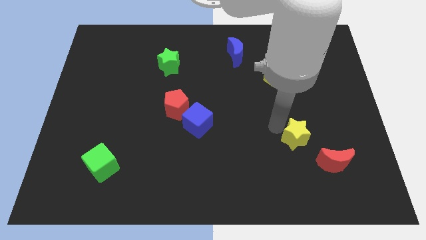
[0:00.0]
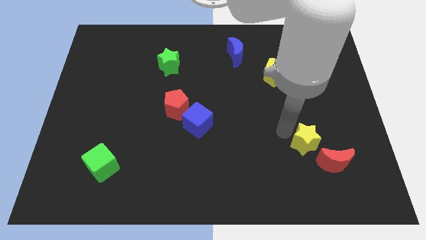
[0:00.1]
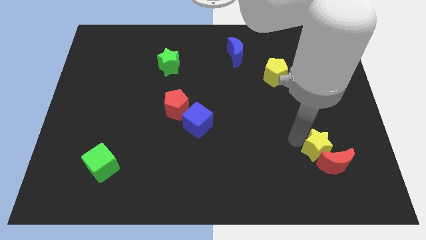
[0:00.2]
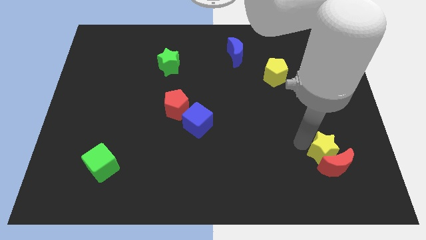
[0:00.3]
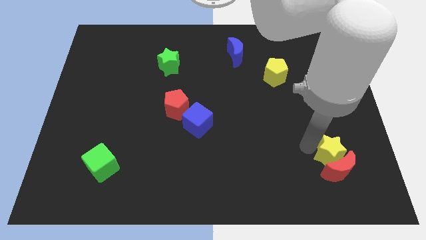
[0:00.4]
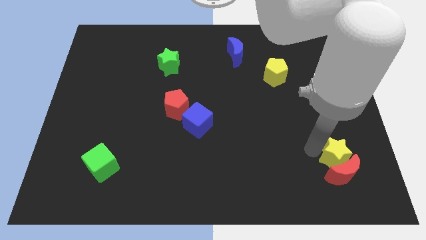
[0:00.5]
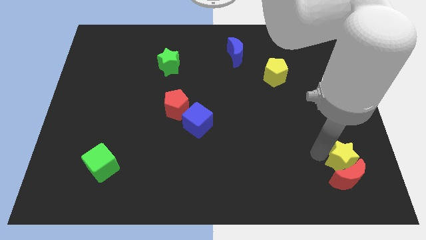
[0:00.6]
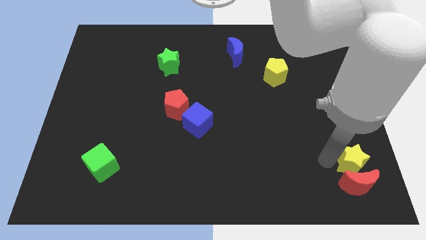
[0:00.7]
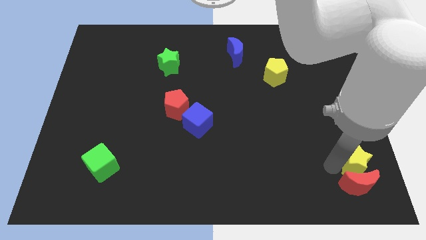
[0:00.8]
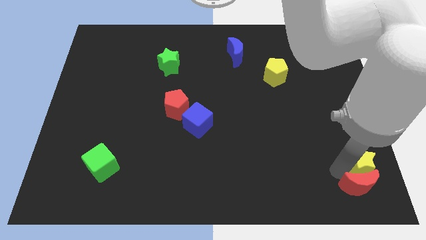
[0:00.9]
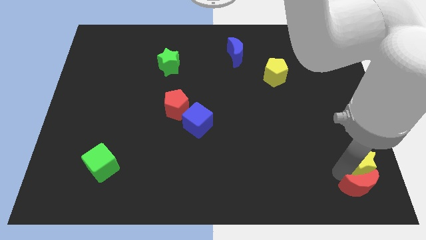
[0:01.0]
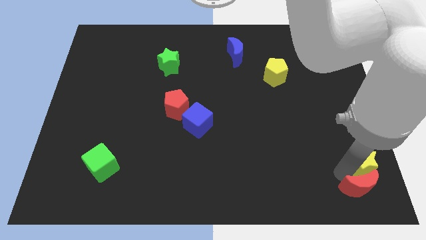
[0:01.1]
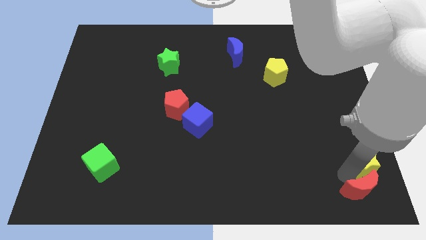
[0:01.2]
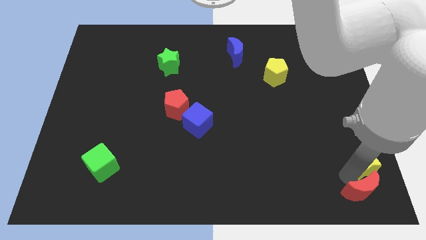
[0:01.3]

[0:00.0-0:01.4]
push yellow star into the red moon

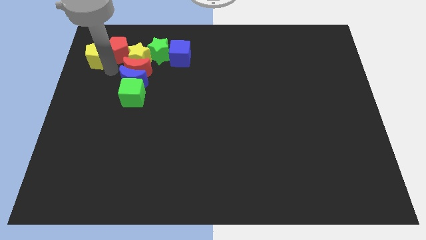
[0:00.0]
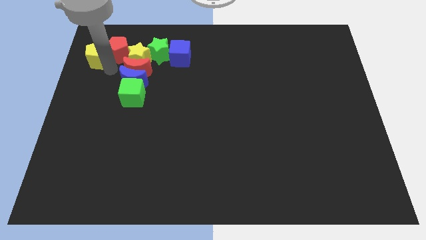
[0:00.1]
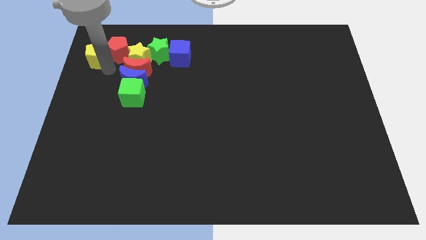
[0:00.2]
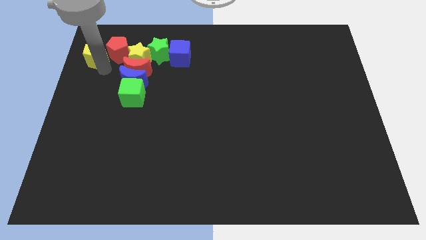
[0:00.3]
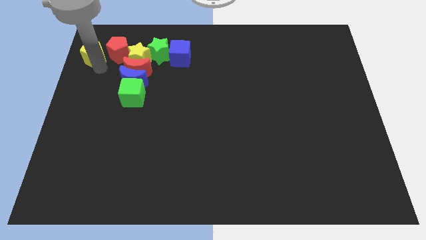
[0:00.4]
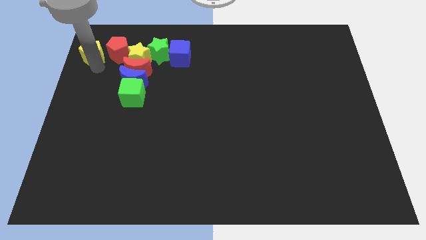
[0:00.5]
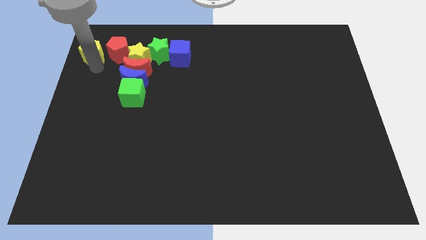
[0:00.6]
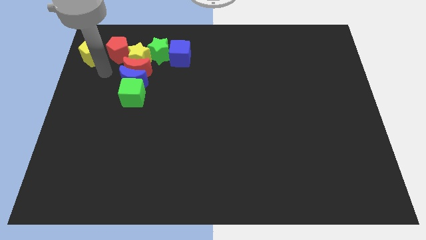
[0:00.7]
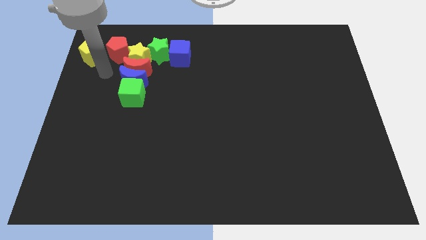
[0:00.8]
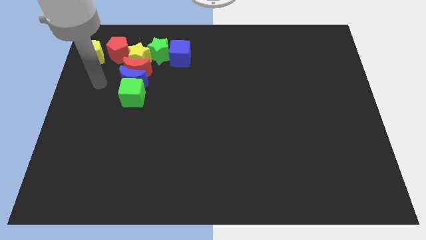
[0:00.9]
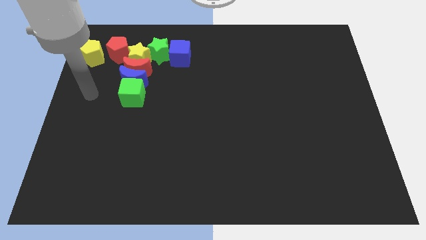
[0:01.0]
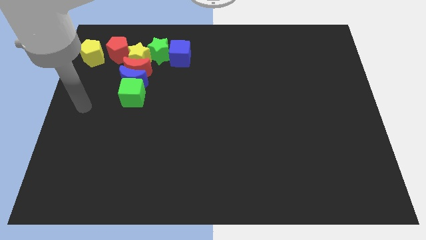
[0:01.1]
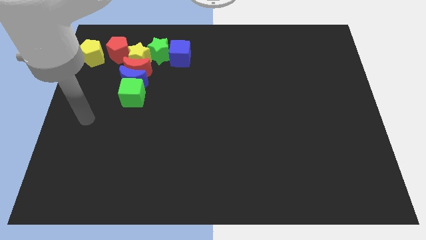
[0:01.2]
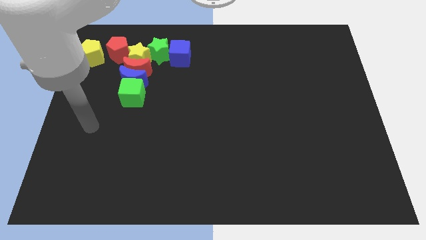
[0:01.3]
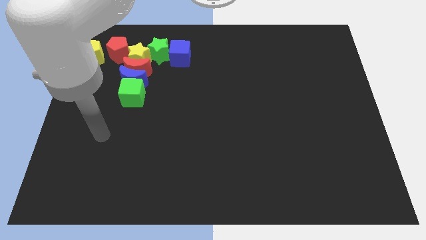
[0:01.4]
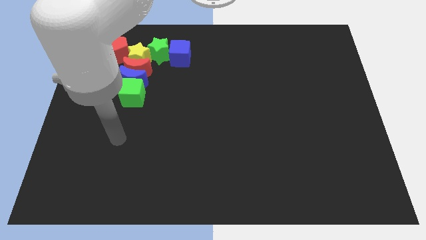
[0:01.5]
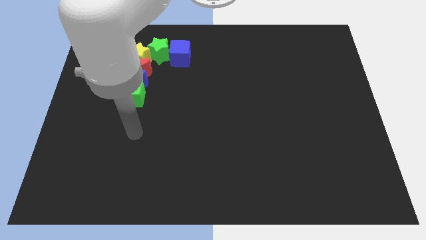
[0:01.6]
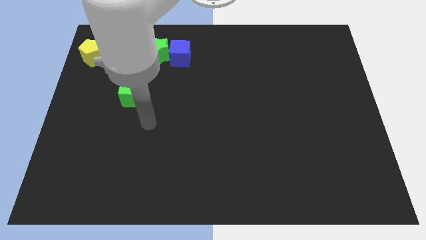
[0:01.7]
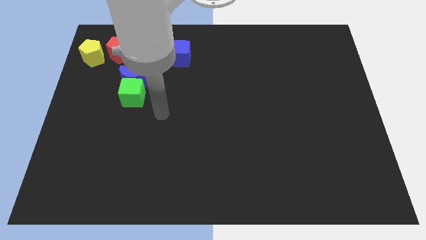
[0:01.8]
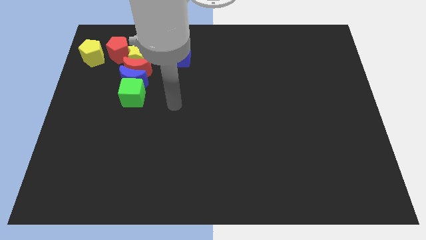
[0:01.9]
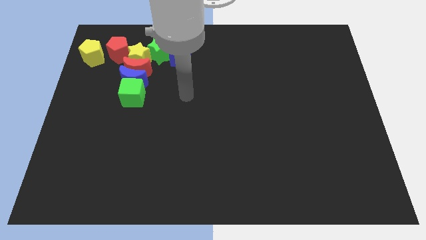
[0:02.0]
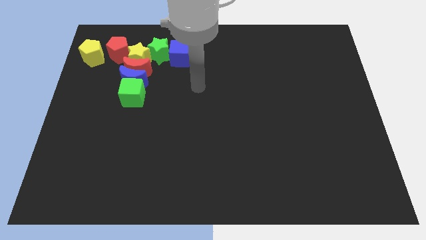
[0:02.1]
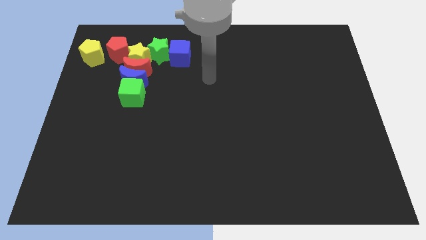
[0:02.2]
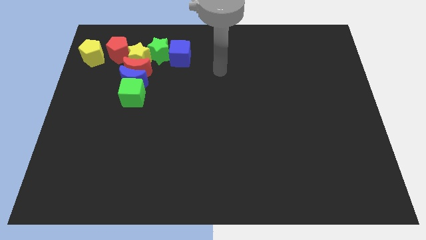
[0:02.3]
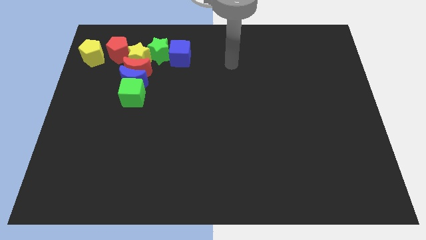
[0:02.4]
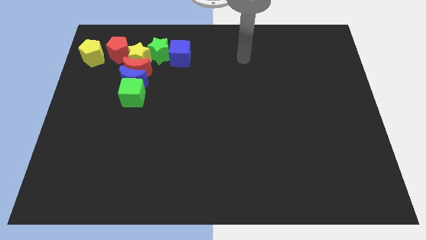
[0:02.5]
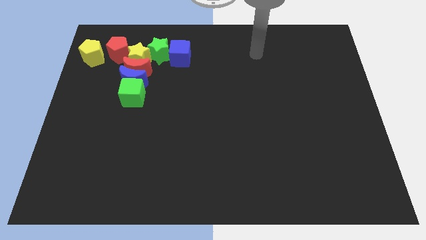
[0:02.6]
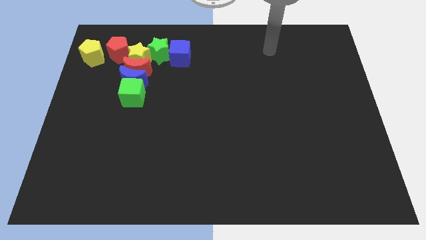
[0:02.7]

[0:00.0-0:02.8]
move yourself away from the yellow pentagon

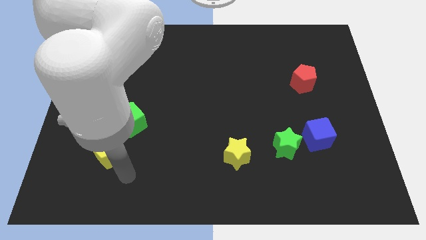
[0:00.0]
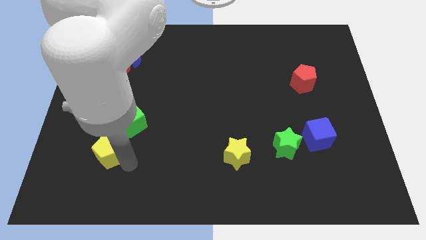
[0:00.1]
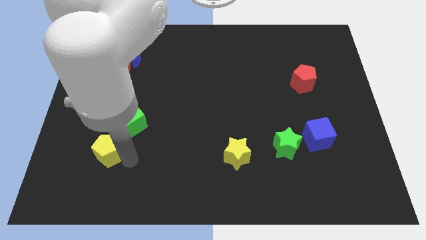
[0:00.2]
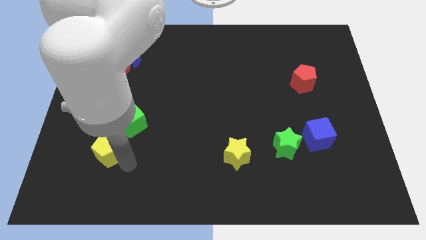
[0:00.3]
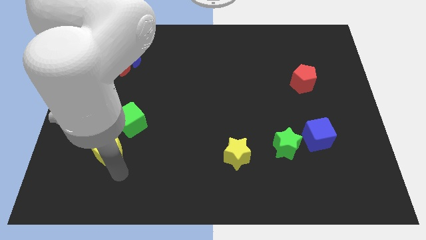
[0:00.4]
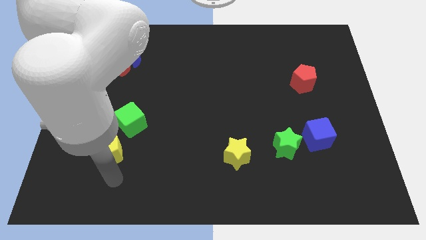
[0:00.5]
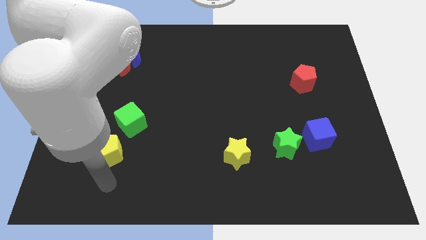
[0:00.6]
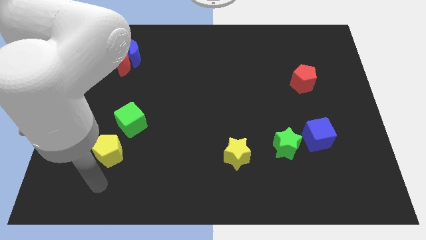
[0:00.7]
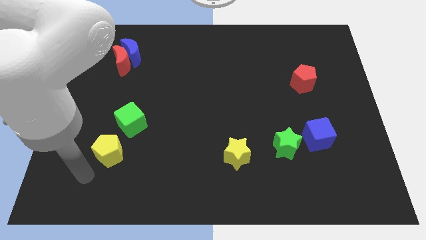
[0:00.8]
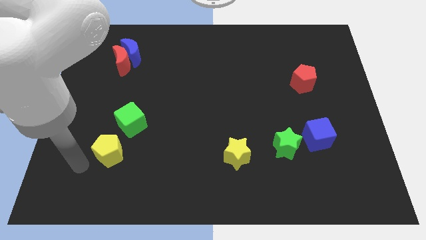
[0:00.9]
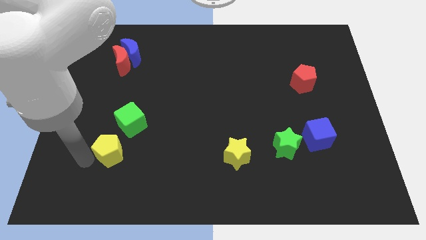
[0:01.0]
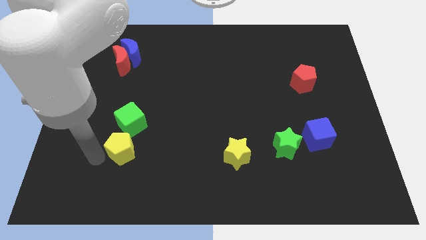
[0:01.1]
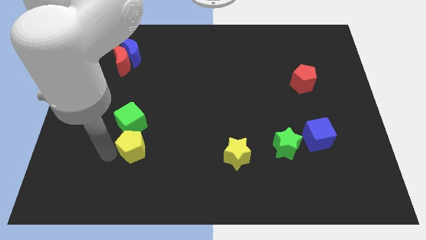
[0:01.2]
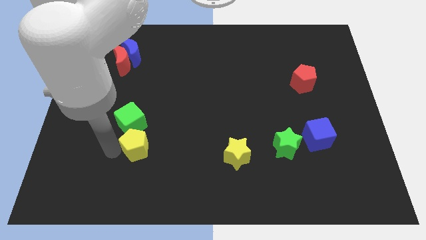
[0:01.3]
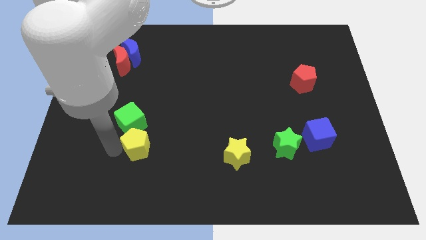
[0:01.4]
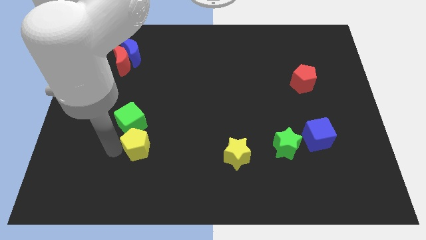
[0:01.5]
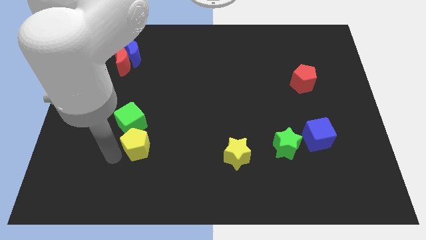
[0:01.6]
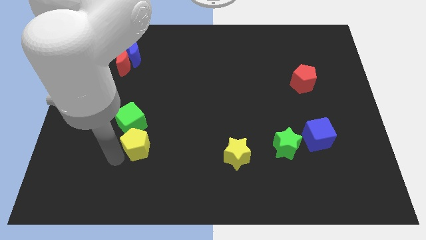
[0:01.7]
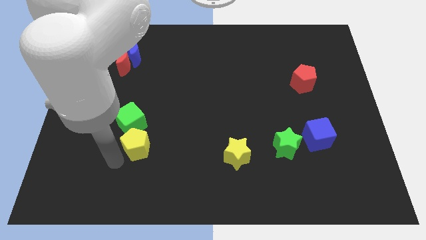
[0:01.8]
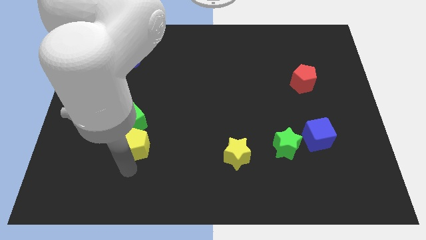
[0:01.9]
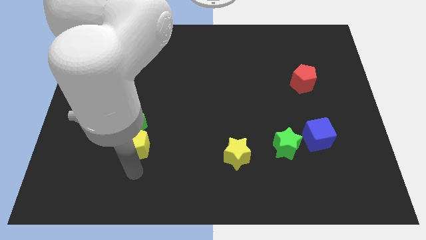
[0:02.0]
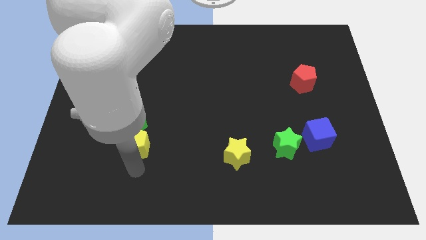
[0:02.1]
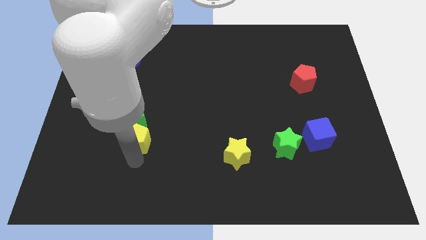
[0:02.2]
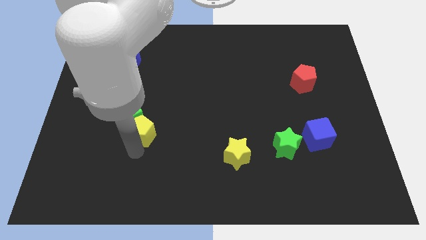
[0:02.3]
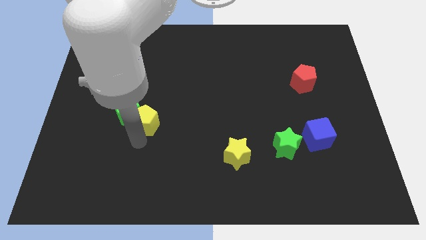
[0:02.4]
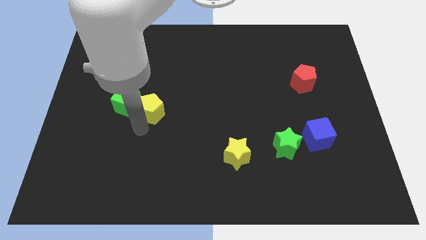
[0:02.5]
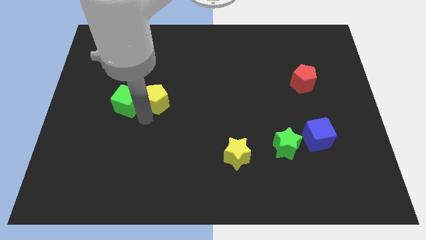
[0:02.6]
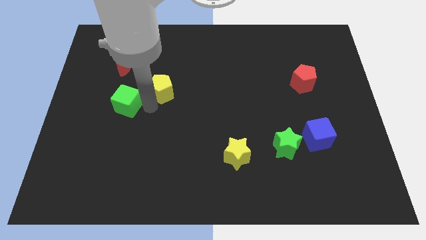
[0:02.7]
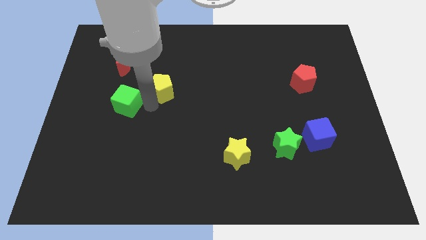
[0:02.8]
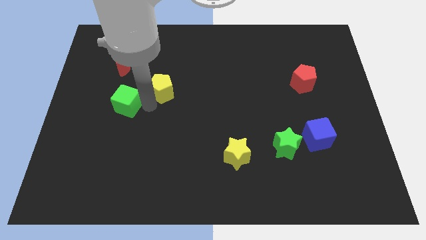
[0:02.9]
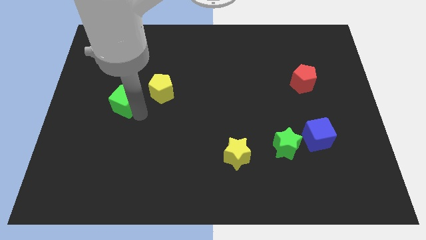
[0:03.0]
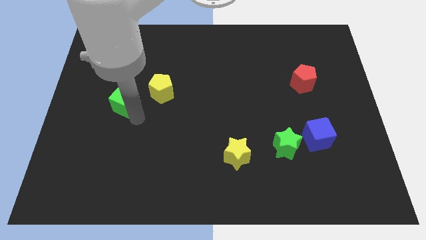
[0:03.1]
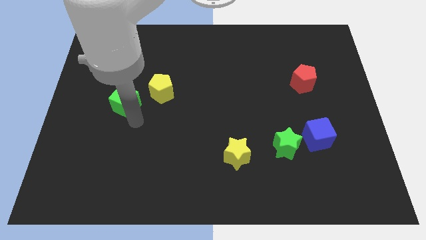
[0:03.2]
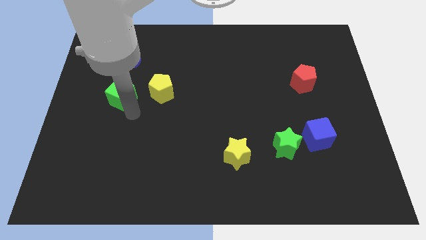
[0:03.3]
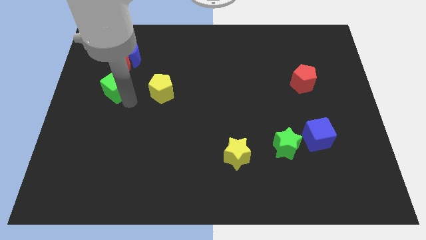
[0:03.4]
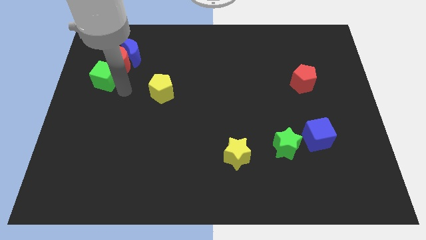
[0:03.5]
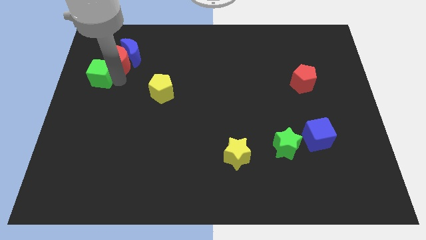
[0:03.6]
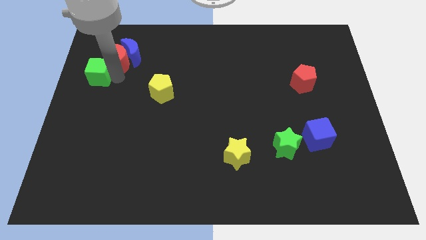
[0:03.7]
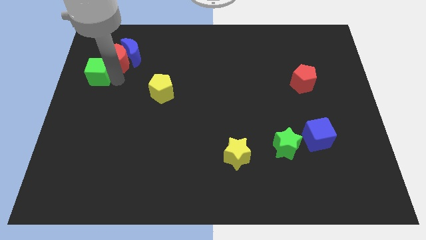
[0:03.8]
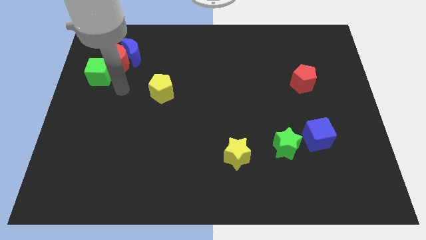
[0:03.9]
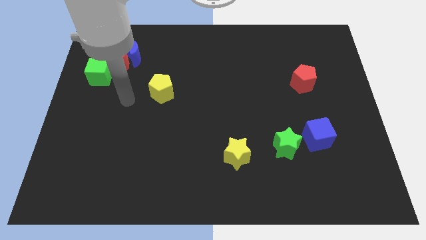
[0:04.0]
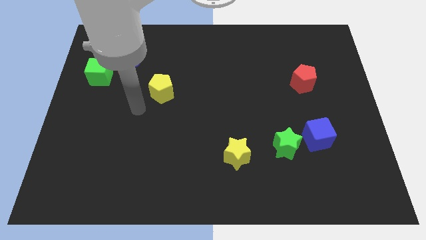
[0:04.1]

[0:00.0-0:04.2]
move the green cube and the yellow pentagon towards top

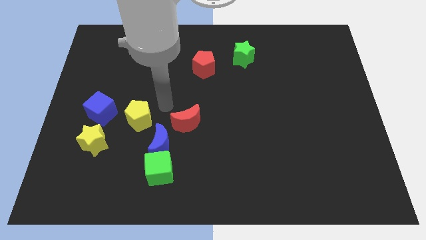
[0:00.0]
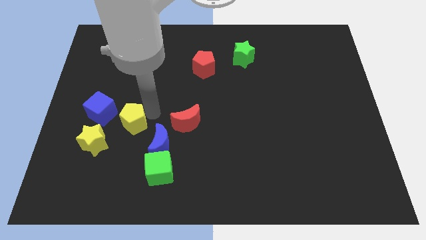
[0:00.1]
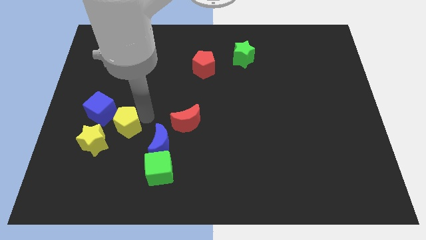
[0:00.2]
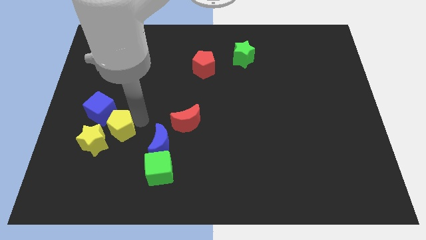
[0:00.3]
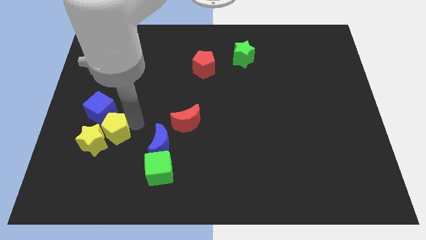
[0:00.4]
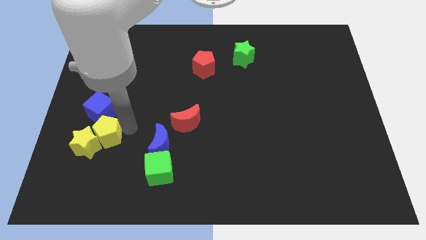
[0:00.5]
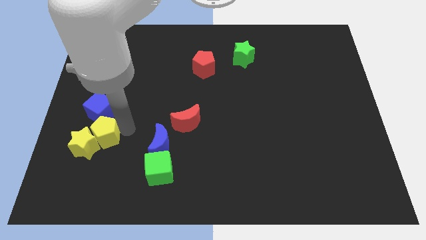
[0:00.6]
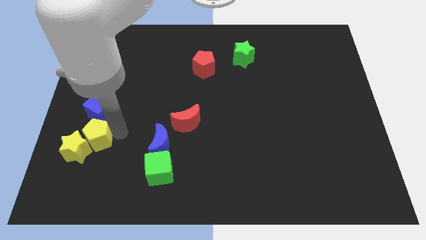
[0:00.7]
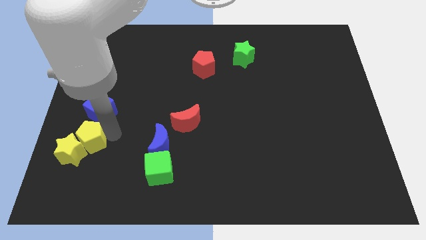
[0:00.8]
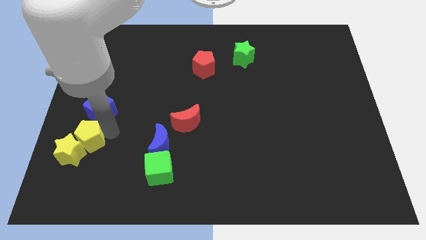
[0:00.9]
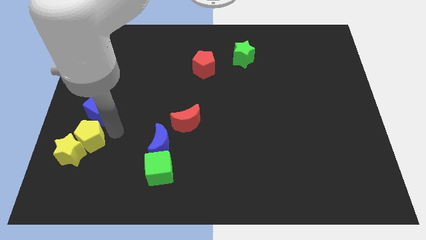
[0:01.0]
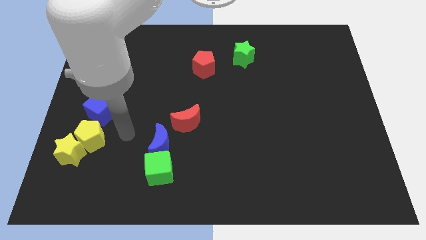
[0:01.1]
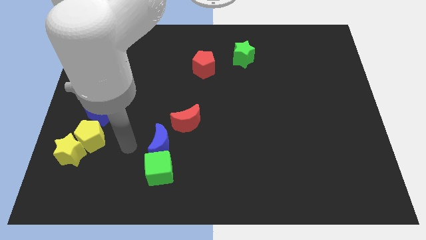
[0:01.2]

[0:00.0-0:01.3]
push the yellow pentagon into yellow star
